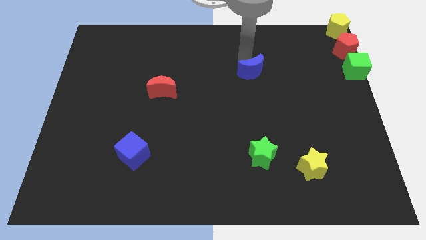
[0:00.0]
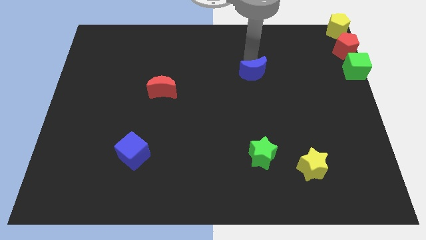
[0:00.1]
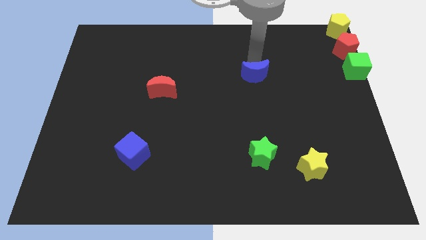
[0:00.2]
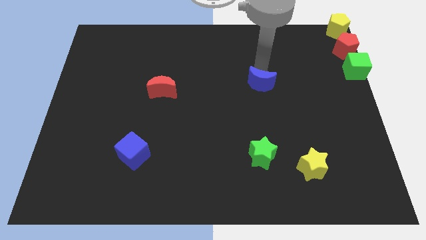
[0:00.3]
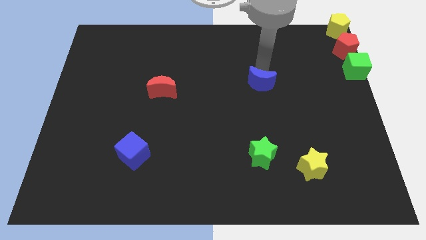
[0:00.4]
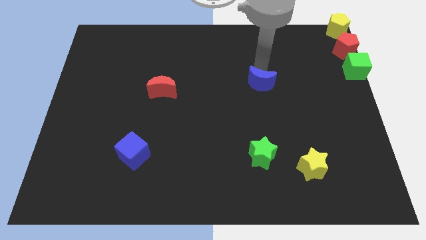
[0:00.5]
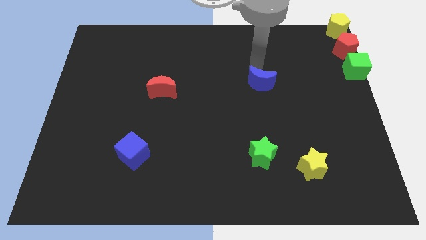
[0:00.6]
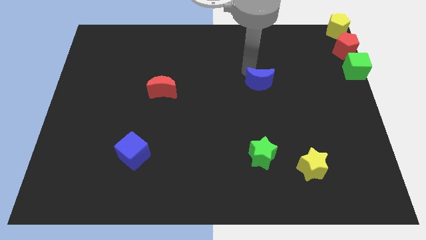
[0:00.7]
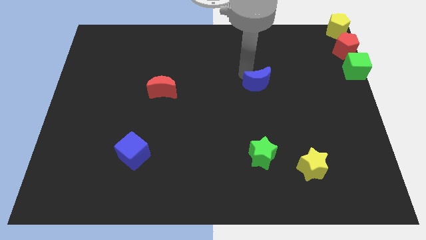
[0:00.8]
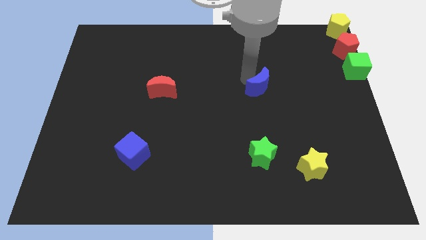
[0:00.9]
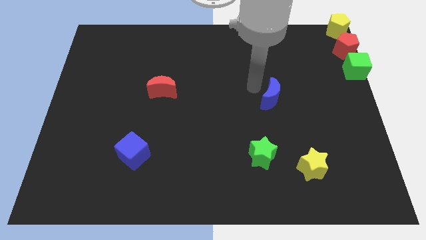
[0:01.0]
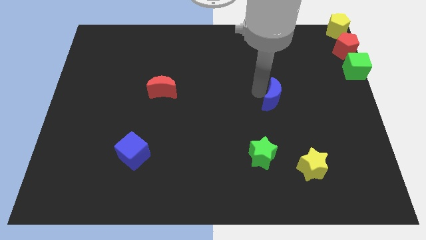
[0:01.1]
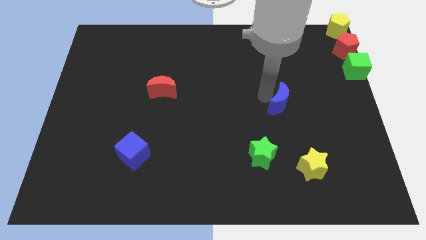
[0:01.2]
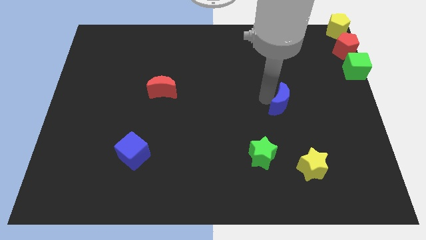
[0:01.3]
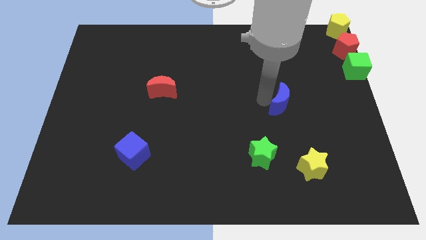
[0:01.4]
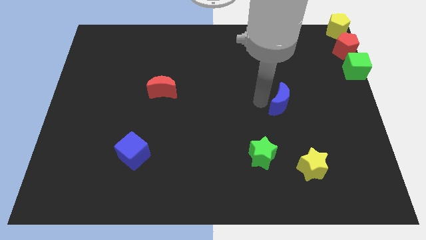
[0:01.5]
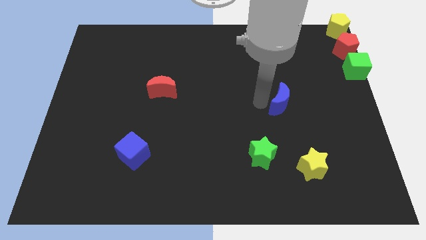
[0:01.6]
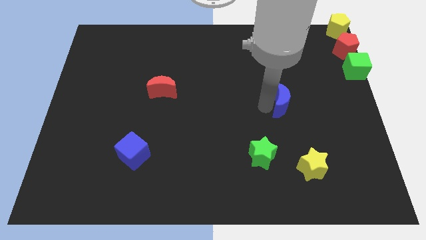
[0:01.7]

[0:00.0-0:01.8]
push the blue moon towards the right center of the board

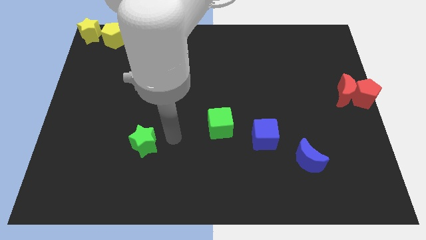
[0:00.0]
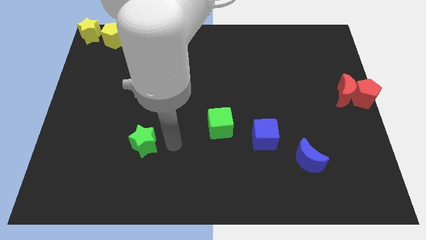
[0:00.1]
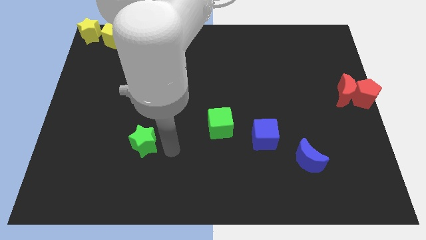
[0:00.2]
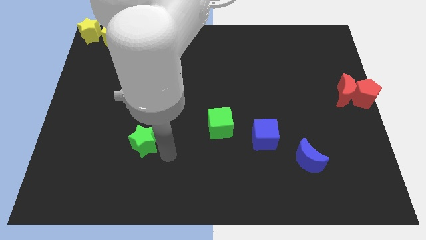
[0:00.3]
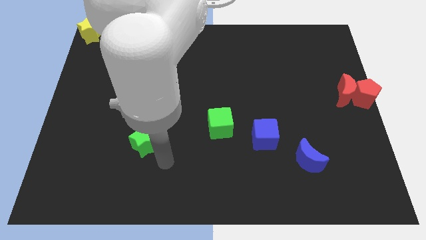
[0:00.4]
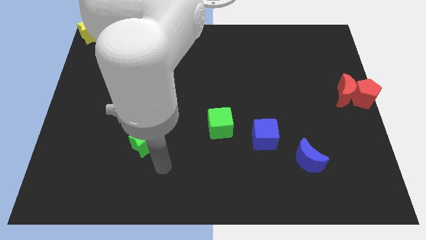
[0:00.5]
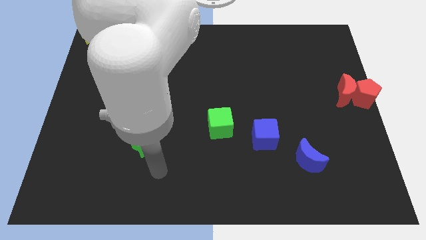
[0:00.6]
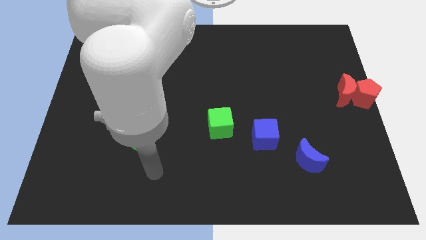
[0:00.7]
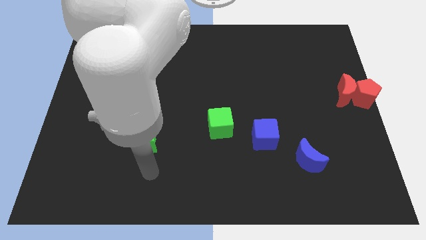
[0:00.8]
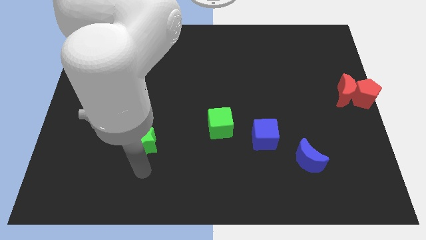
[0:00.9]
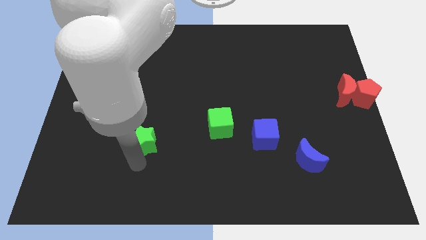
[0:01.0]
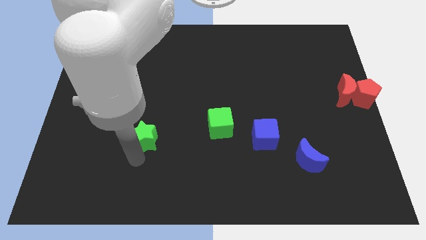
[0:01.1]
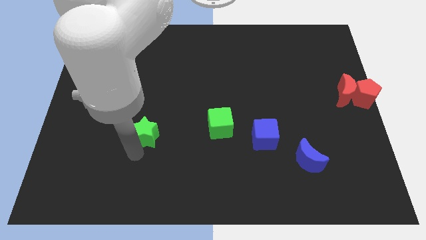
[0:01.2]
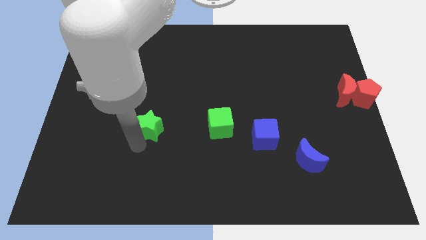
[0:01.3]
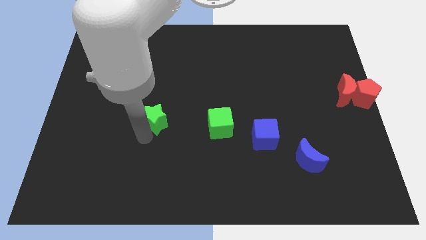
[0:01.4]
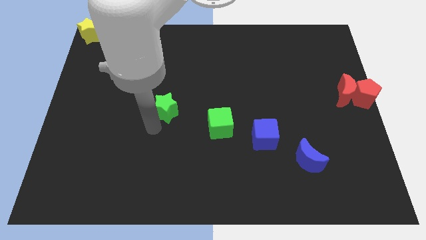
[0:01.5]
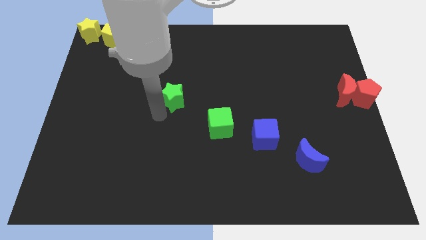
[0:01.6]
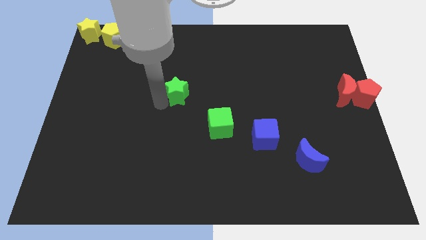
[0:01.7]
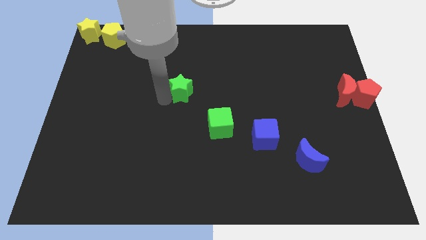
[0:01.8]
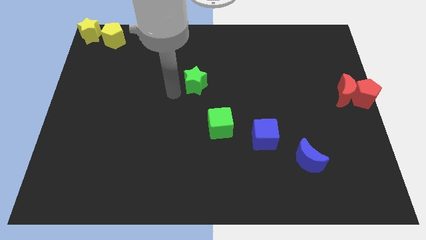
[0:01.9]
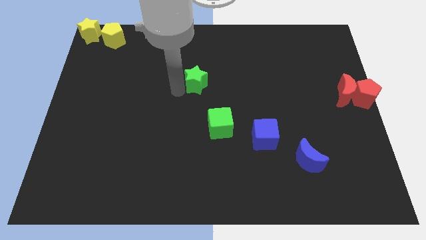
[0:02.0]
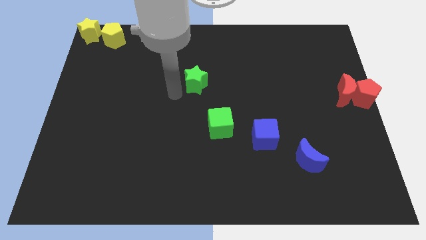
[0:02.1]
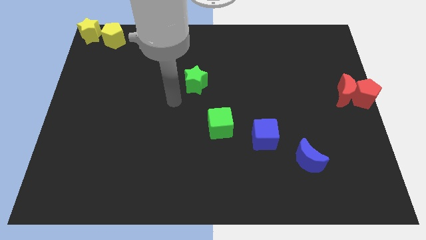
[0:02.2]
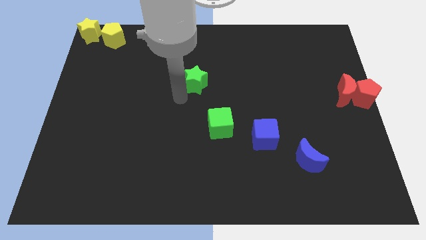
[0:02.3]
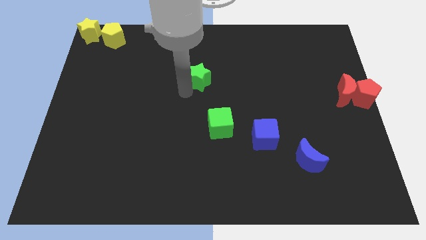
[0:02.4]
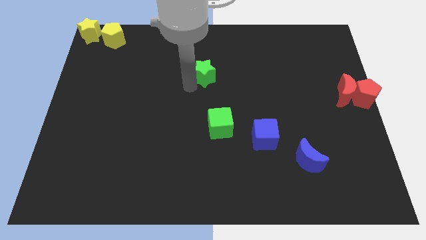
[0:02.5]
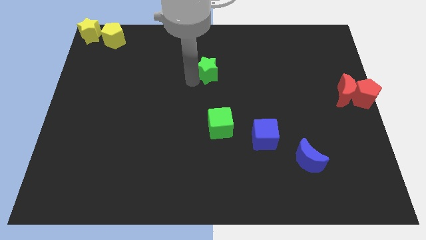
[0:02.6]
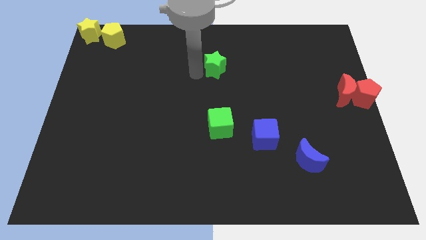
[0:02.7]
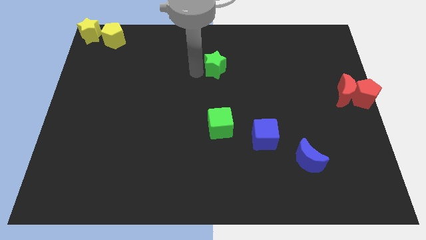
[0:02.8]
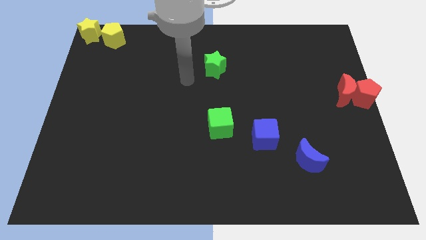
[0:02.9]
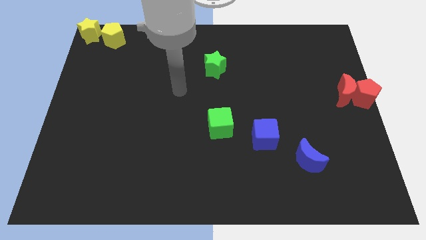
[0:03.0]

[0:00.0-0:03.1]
place green star above green cube

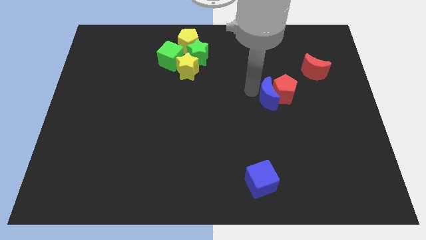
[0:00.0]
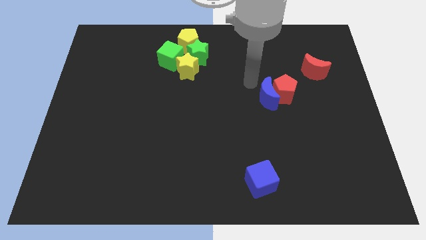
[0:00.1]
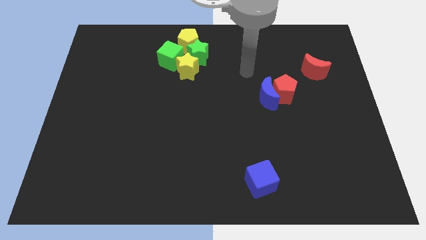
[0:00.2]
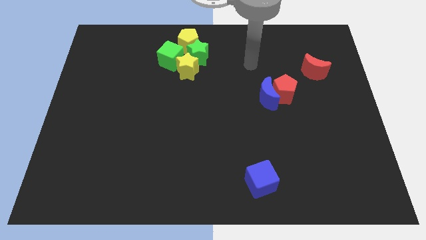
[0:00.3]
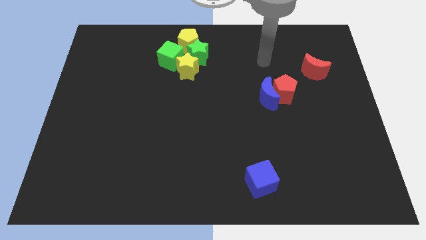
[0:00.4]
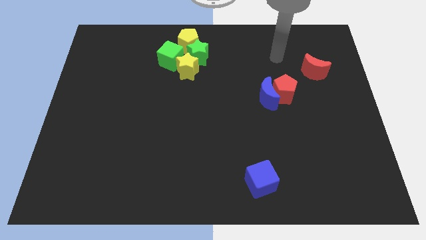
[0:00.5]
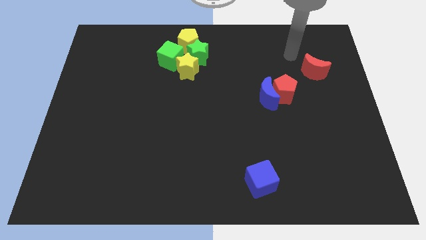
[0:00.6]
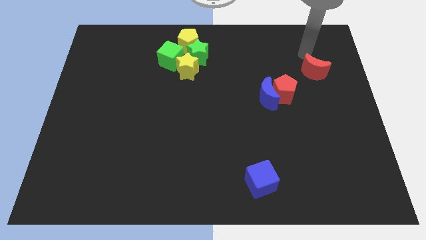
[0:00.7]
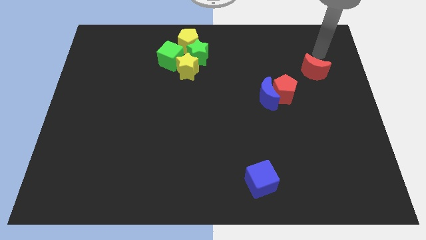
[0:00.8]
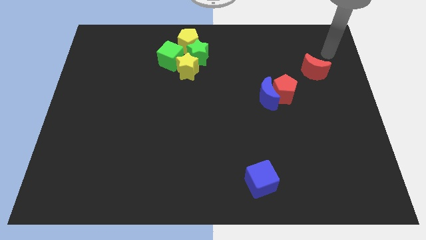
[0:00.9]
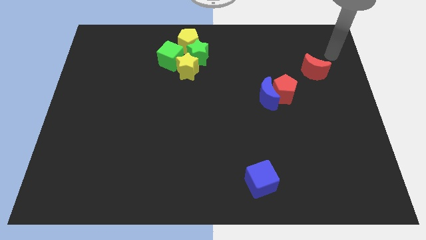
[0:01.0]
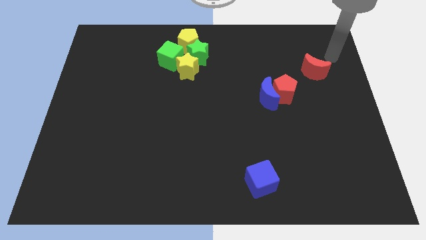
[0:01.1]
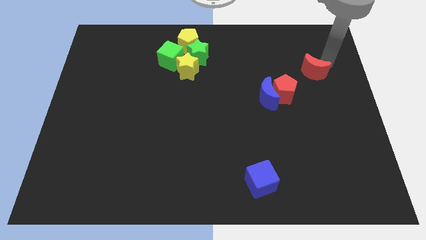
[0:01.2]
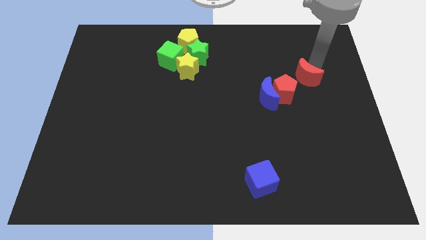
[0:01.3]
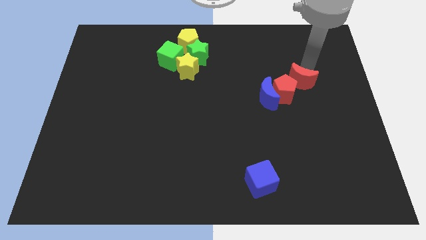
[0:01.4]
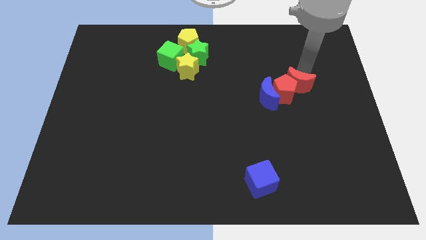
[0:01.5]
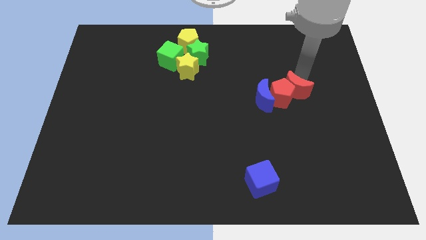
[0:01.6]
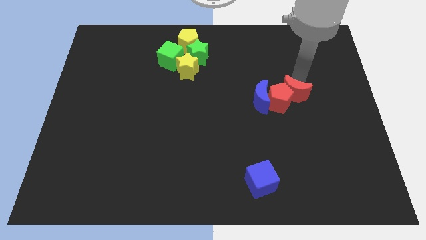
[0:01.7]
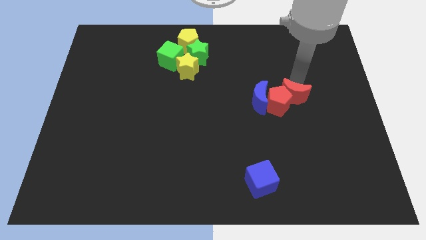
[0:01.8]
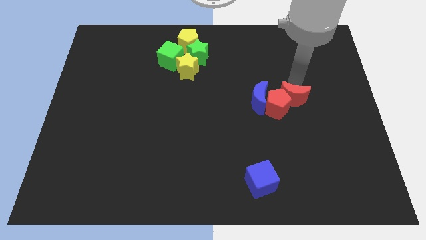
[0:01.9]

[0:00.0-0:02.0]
place red moon to the top right of red pentagon

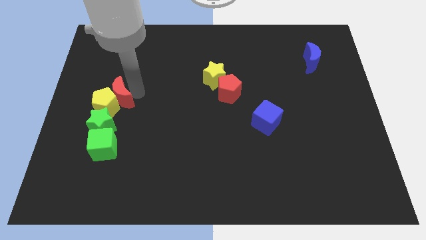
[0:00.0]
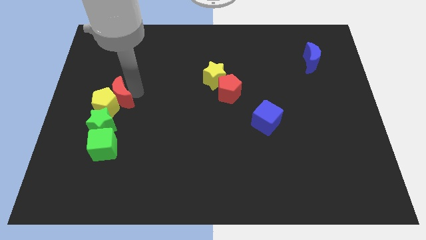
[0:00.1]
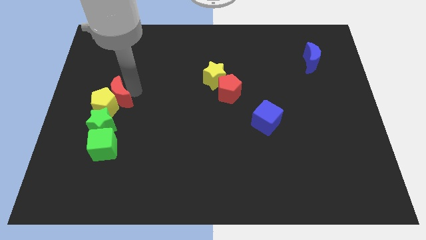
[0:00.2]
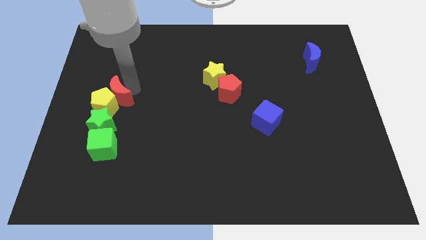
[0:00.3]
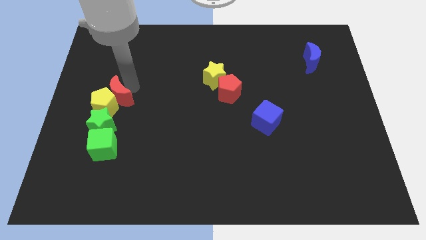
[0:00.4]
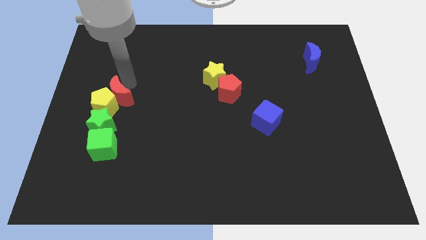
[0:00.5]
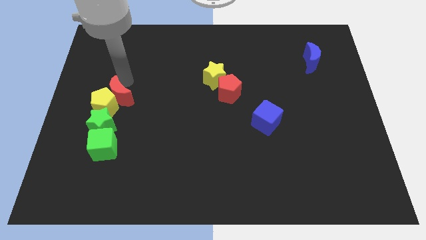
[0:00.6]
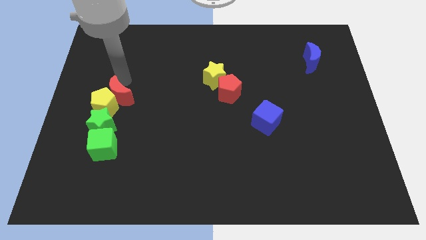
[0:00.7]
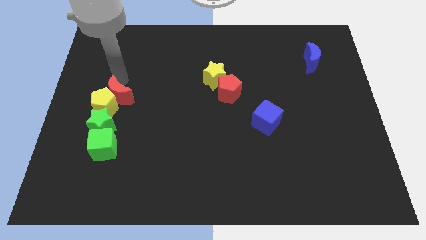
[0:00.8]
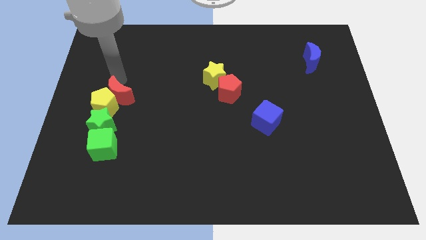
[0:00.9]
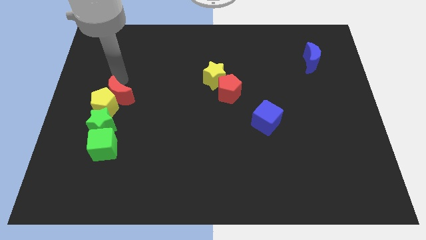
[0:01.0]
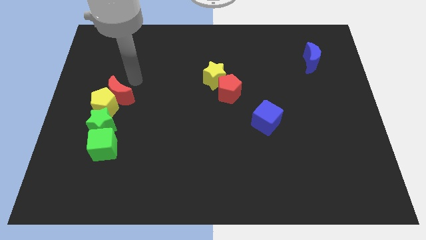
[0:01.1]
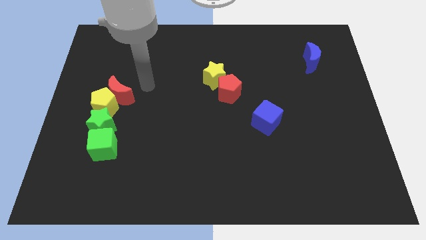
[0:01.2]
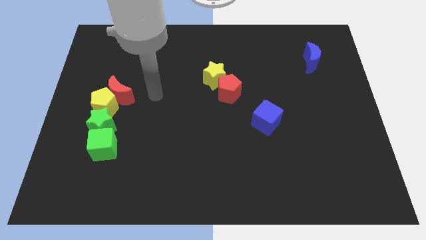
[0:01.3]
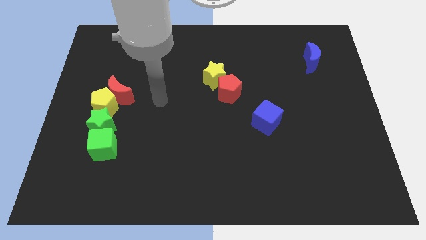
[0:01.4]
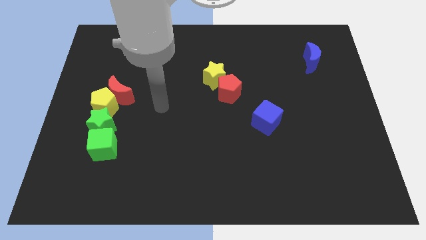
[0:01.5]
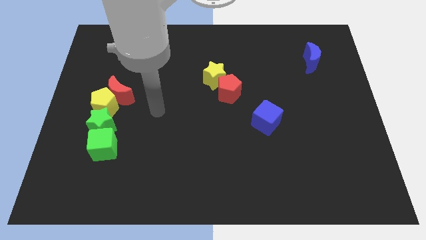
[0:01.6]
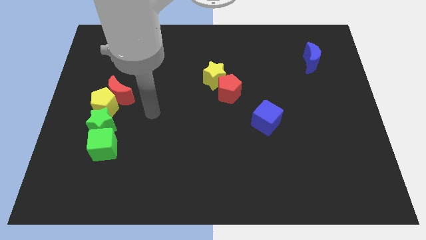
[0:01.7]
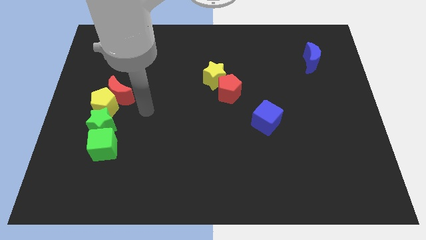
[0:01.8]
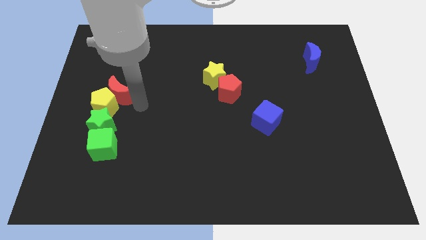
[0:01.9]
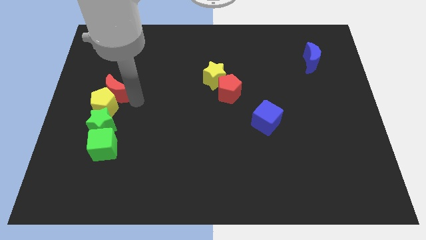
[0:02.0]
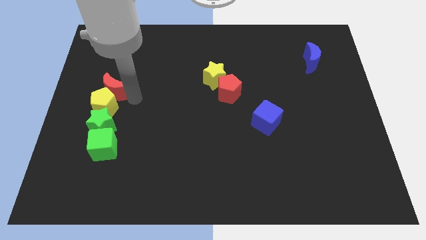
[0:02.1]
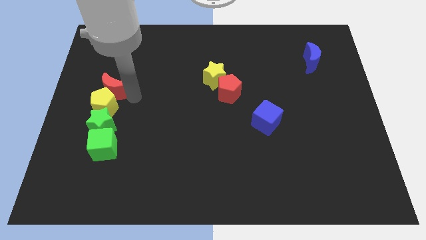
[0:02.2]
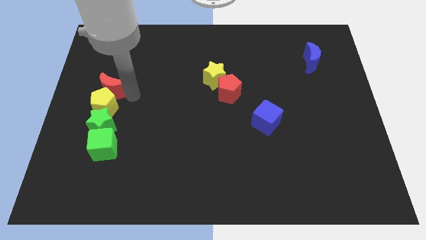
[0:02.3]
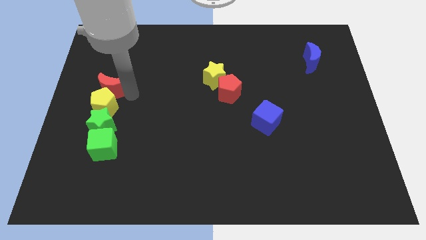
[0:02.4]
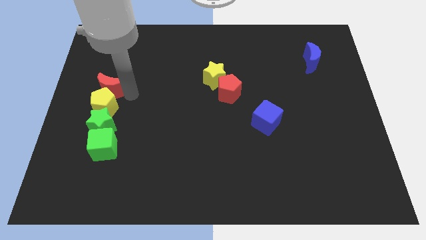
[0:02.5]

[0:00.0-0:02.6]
move the red crescent above the yellow pentagon to form a vertical line of blocks
